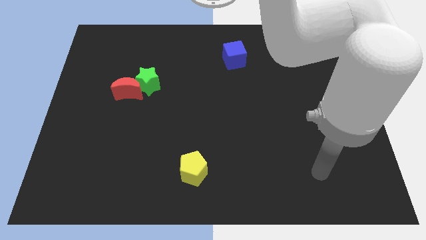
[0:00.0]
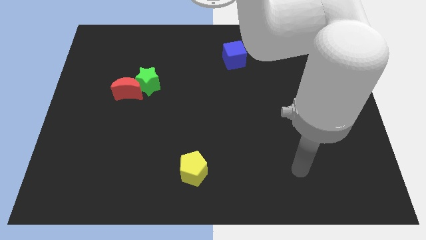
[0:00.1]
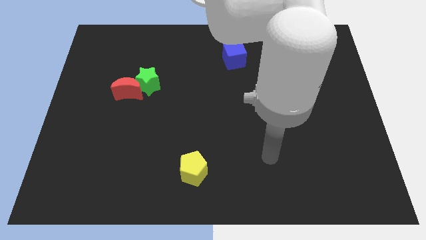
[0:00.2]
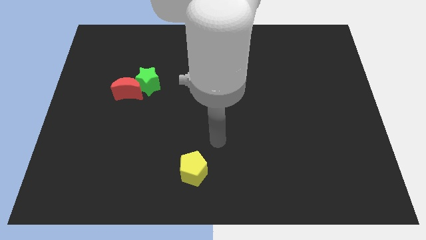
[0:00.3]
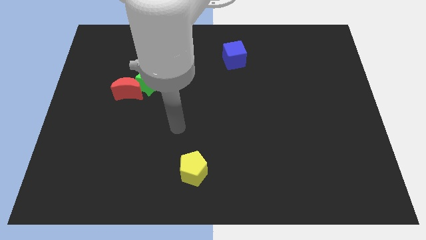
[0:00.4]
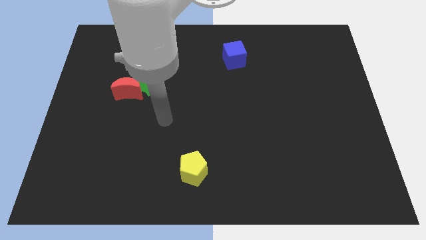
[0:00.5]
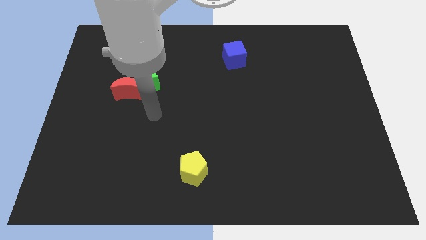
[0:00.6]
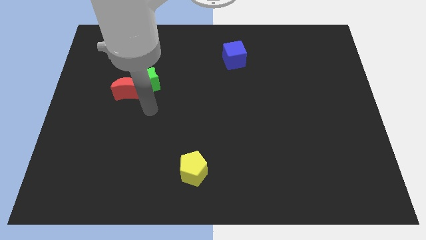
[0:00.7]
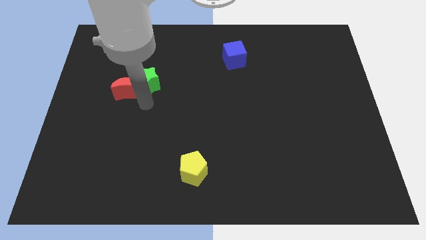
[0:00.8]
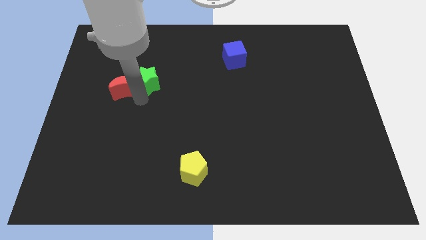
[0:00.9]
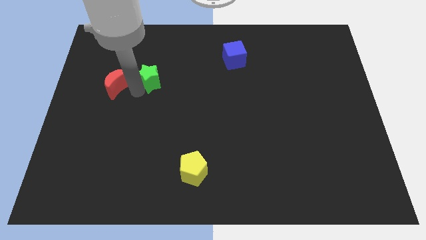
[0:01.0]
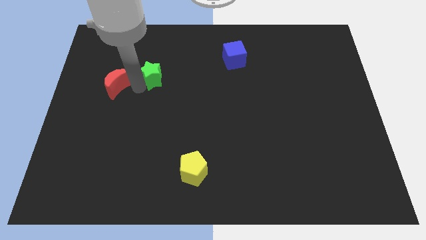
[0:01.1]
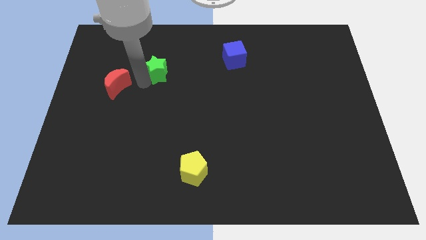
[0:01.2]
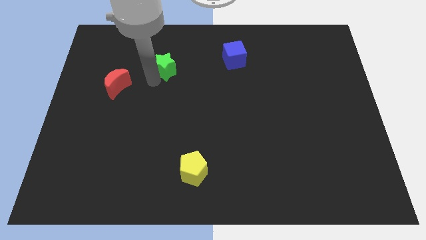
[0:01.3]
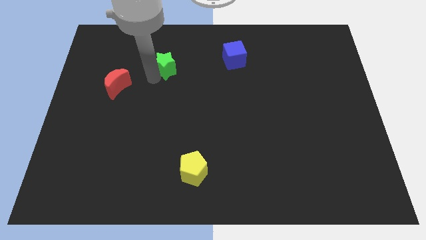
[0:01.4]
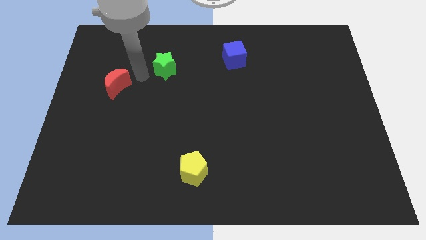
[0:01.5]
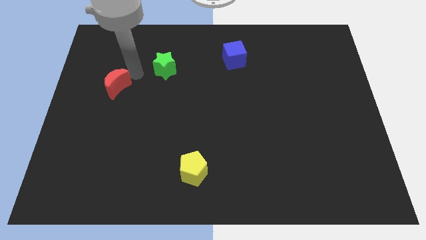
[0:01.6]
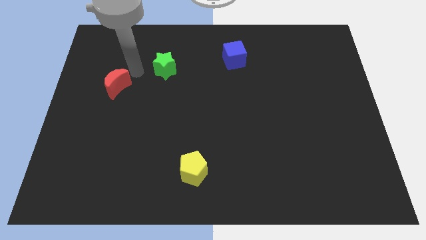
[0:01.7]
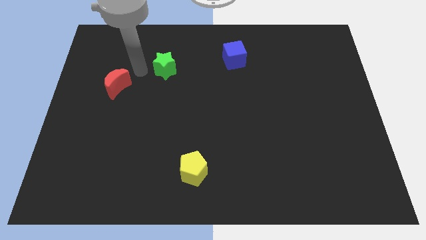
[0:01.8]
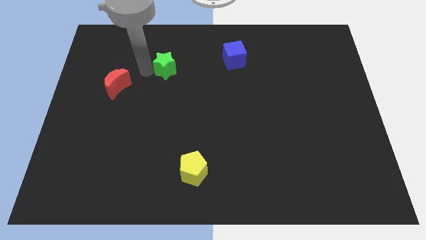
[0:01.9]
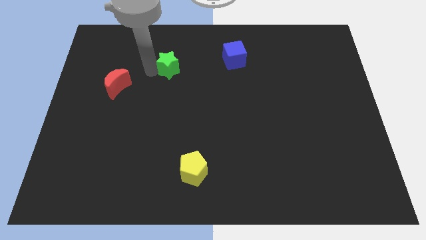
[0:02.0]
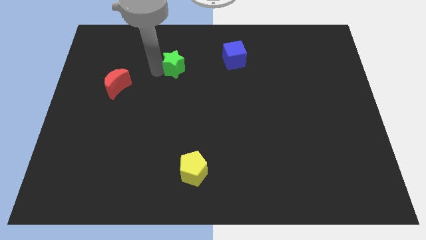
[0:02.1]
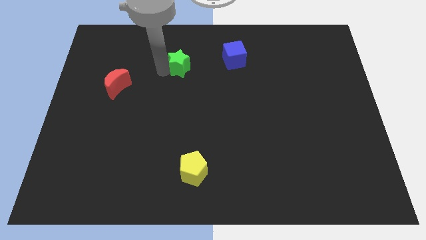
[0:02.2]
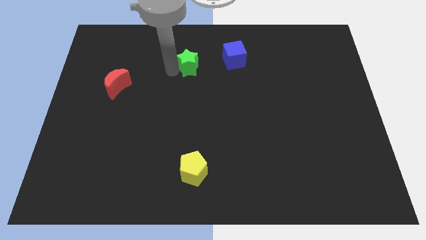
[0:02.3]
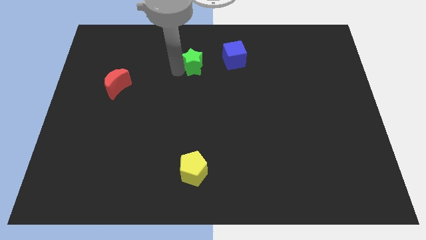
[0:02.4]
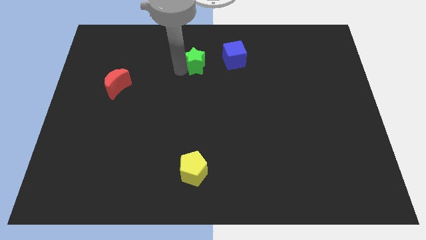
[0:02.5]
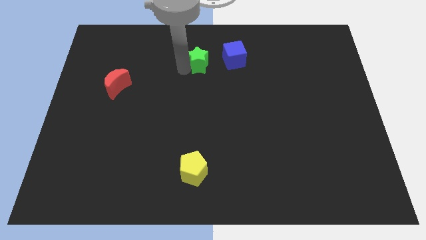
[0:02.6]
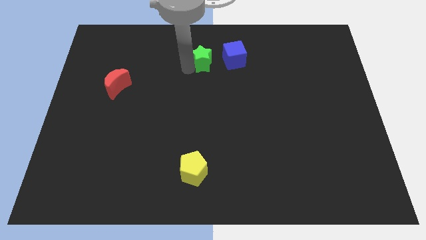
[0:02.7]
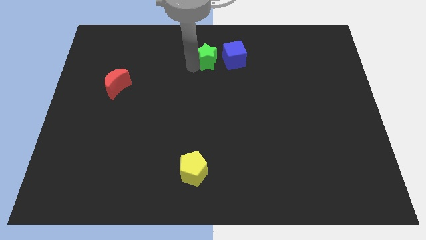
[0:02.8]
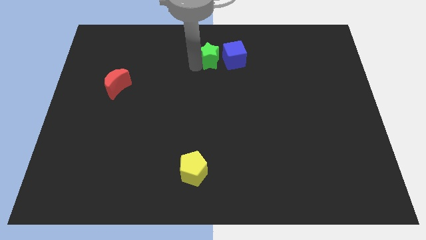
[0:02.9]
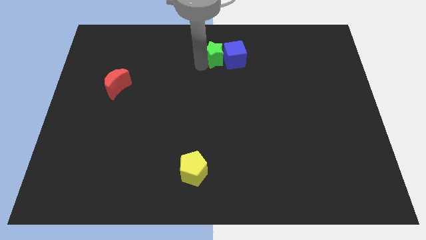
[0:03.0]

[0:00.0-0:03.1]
push the star to the cube

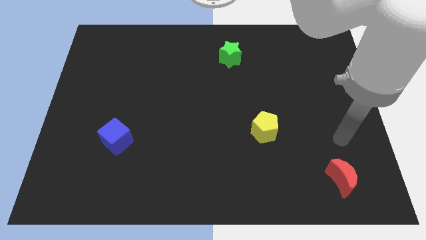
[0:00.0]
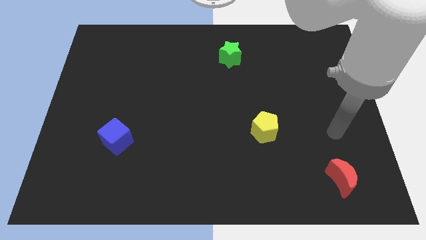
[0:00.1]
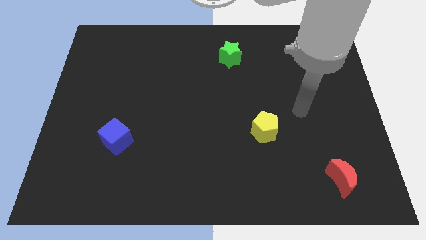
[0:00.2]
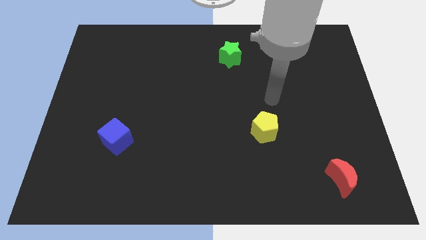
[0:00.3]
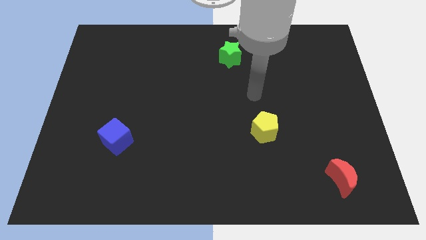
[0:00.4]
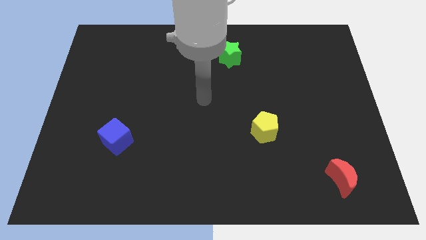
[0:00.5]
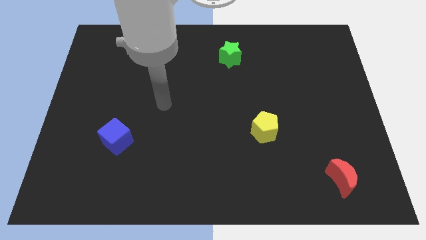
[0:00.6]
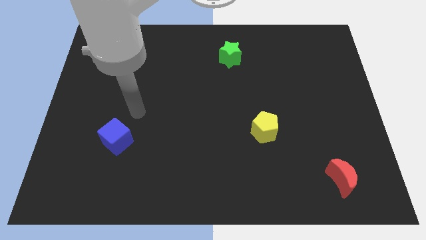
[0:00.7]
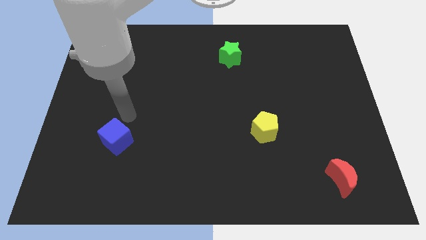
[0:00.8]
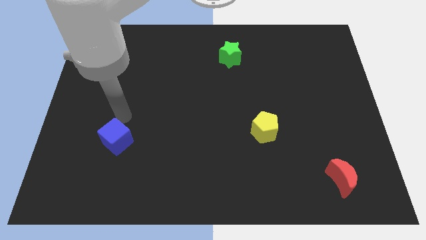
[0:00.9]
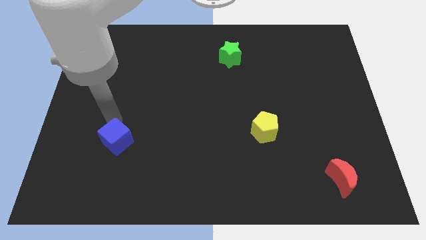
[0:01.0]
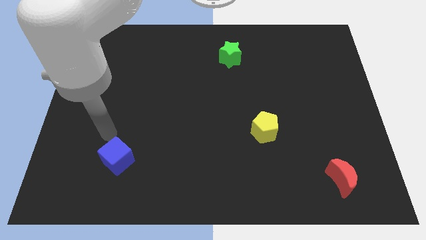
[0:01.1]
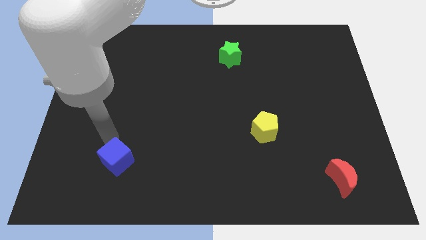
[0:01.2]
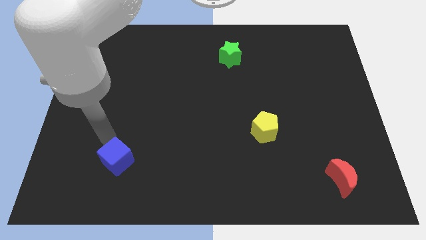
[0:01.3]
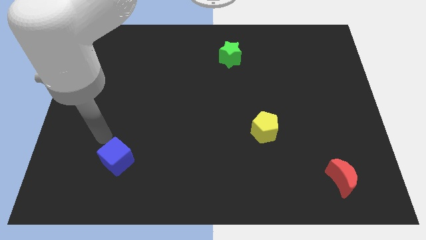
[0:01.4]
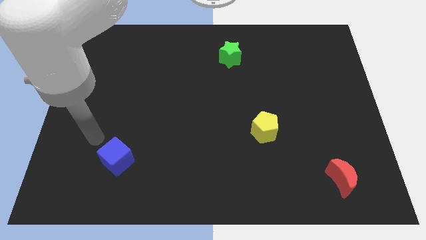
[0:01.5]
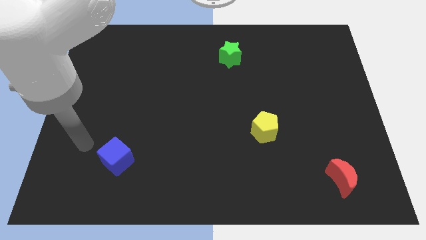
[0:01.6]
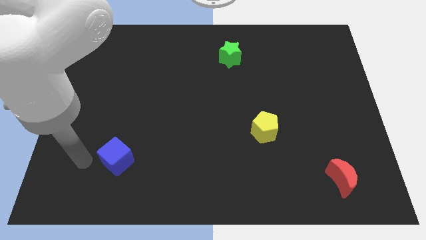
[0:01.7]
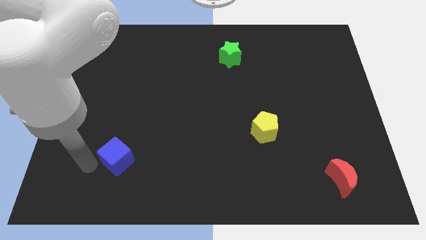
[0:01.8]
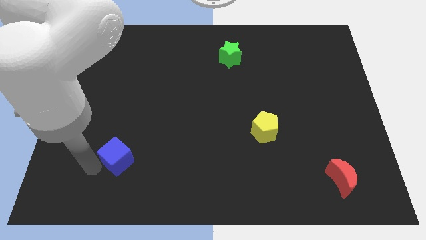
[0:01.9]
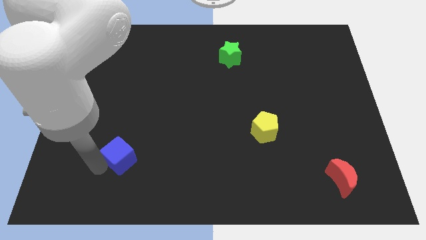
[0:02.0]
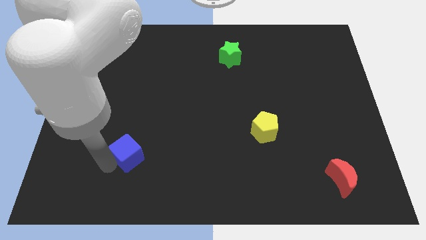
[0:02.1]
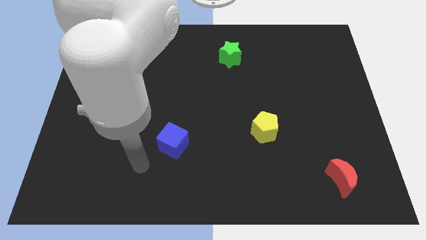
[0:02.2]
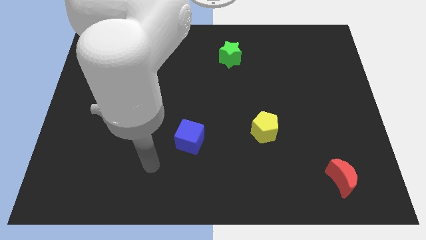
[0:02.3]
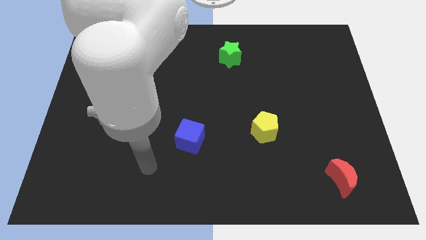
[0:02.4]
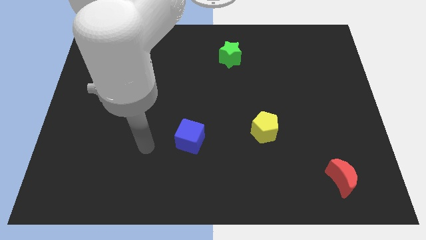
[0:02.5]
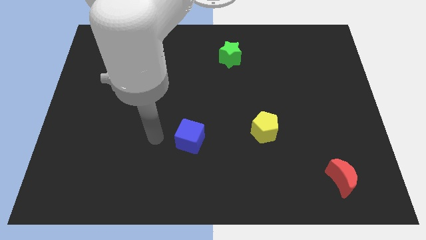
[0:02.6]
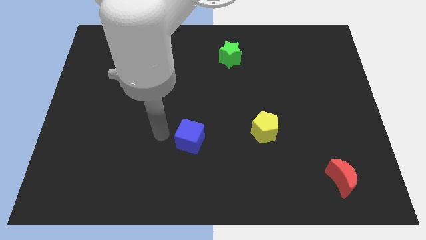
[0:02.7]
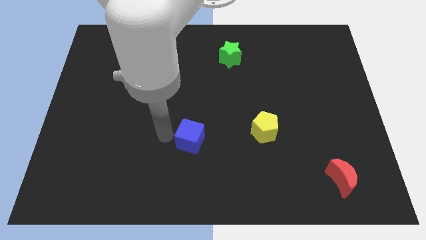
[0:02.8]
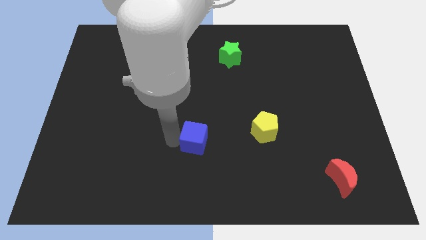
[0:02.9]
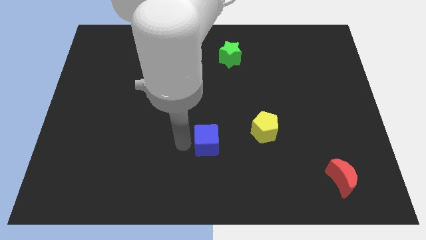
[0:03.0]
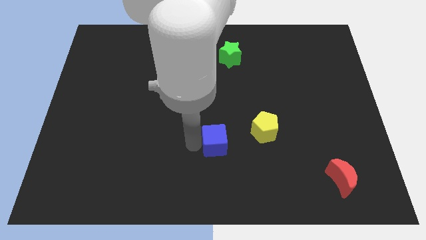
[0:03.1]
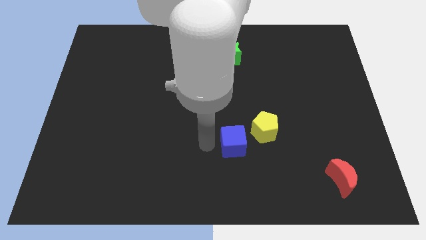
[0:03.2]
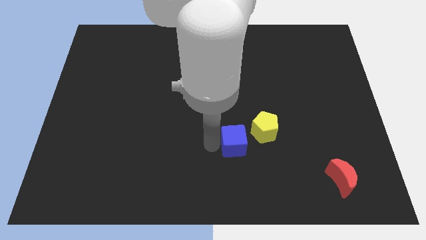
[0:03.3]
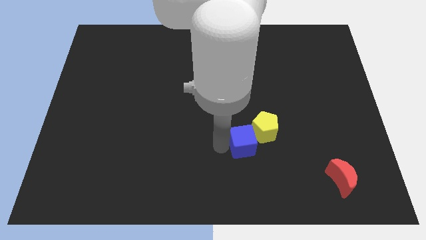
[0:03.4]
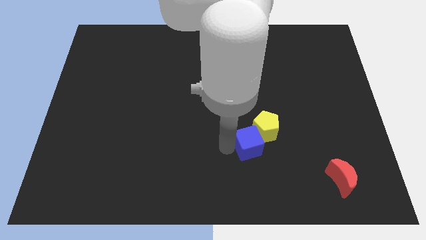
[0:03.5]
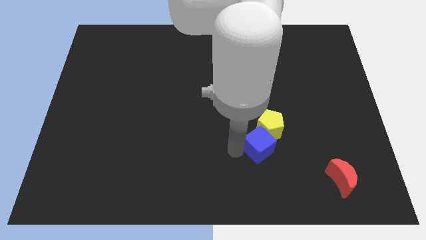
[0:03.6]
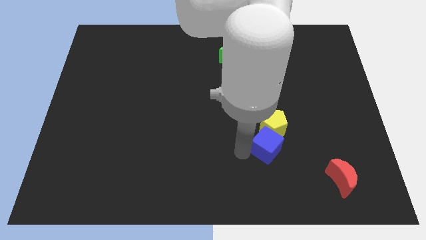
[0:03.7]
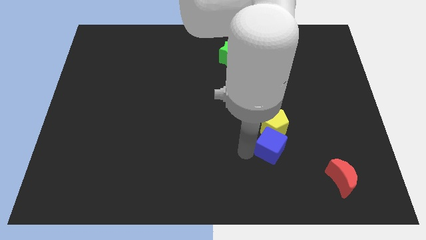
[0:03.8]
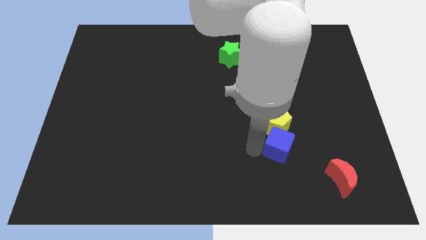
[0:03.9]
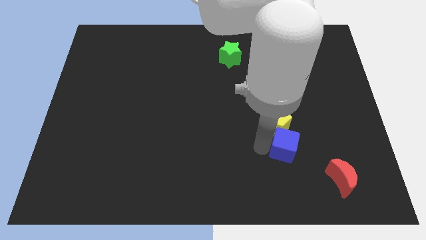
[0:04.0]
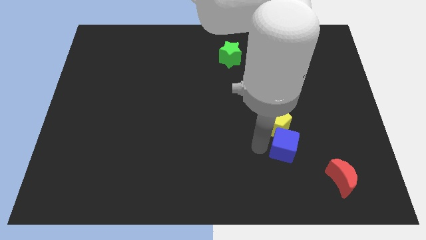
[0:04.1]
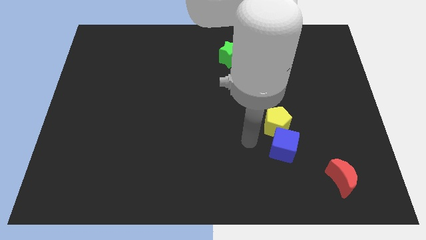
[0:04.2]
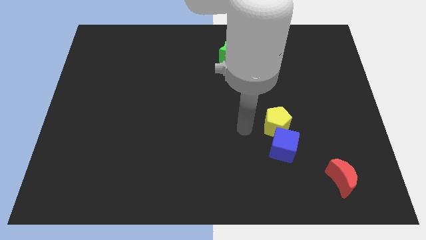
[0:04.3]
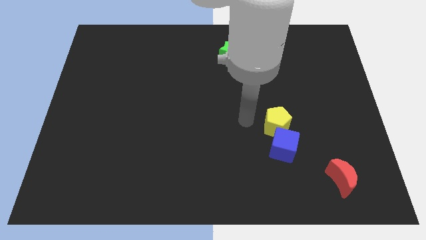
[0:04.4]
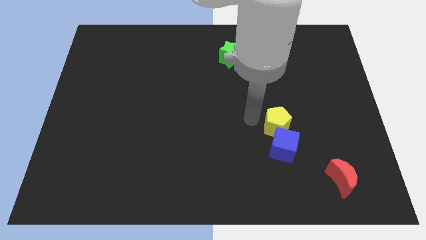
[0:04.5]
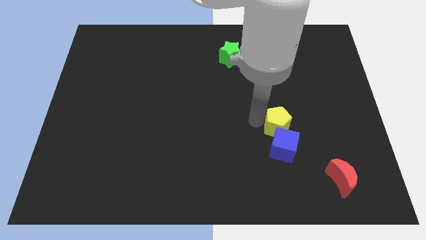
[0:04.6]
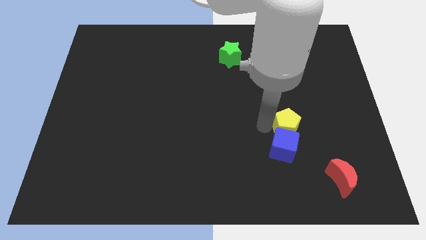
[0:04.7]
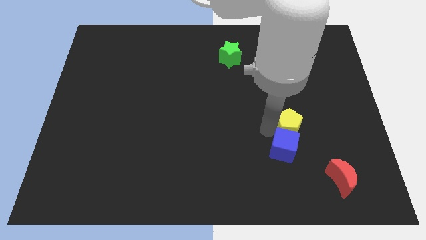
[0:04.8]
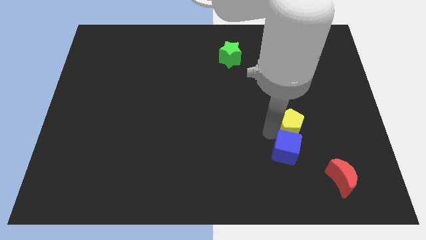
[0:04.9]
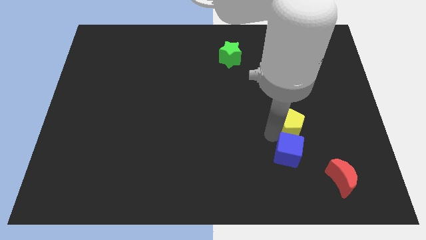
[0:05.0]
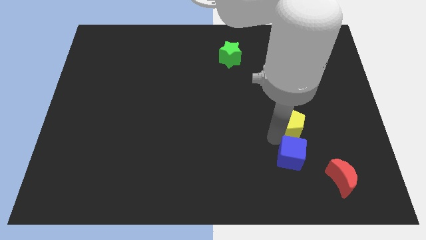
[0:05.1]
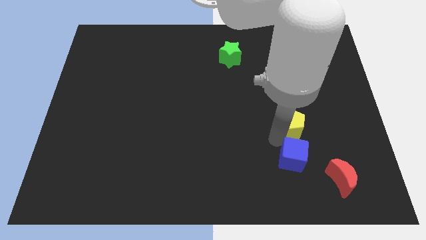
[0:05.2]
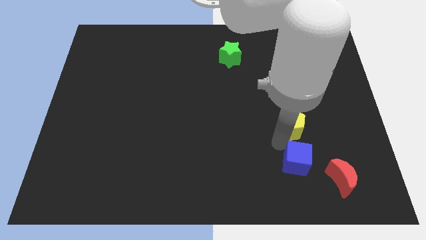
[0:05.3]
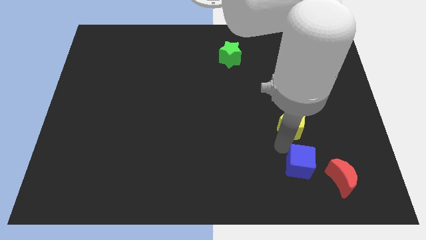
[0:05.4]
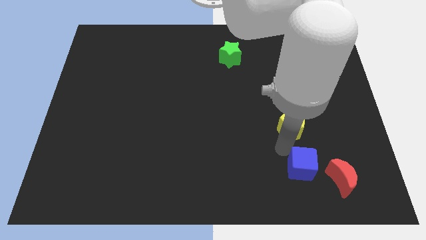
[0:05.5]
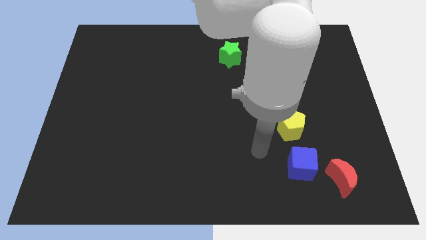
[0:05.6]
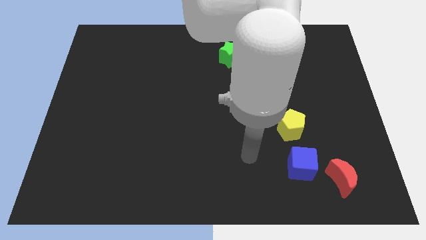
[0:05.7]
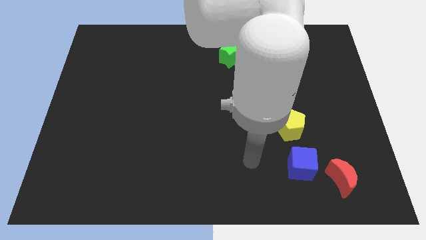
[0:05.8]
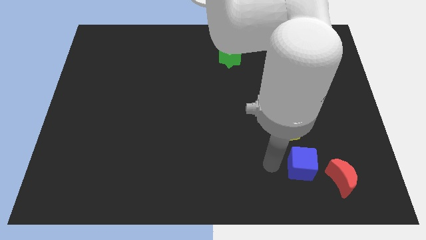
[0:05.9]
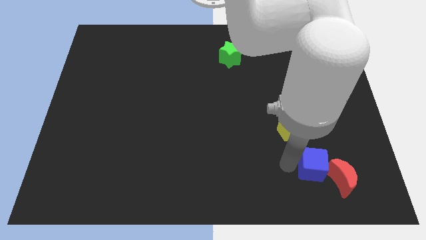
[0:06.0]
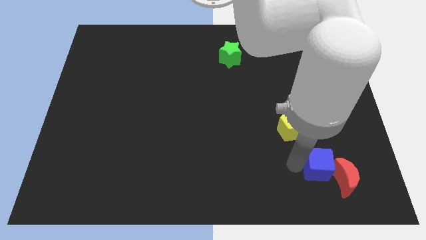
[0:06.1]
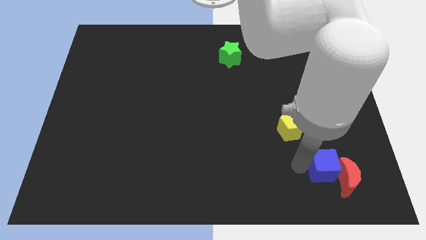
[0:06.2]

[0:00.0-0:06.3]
move the blue cube close to the red block
